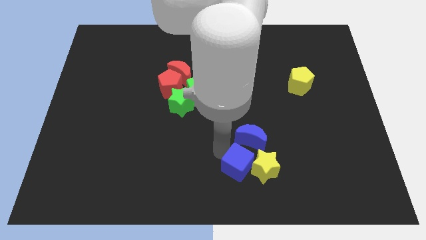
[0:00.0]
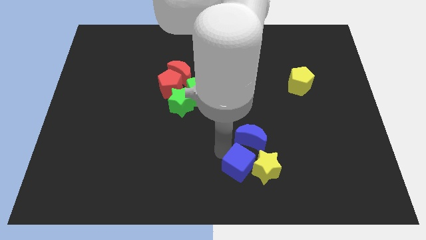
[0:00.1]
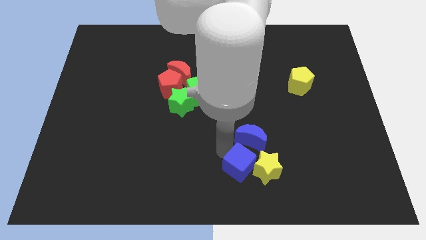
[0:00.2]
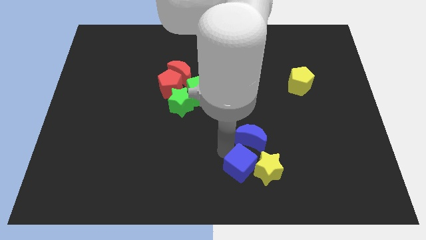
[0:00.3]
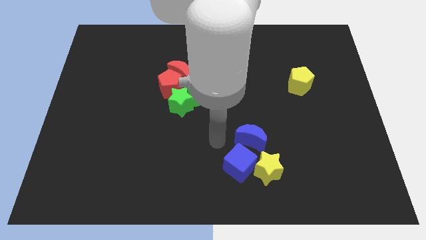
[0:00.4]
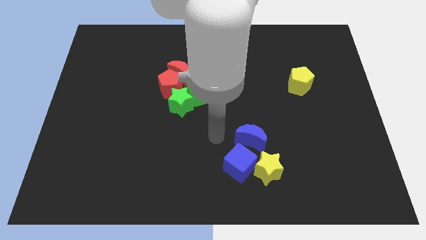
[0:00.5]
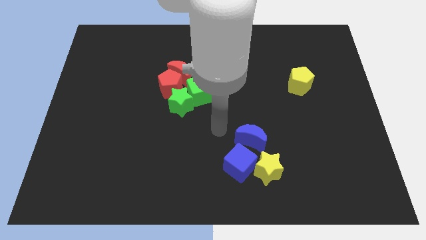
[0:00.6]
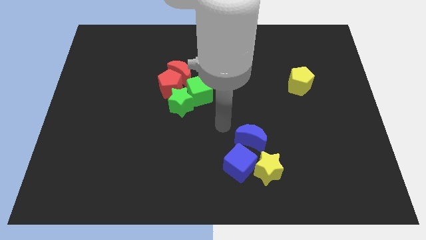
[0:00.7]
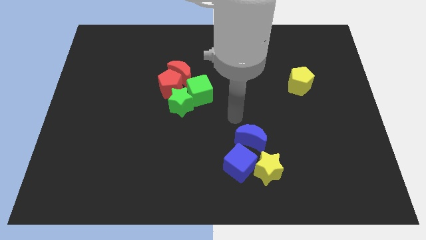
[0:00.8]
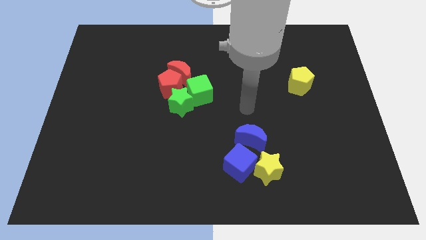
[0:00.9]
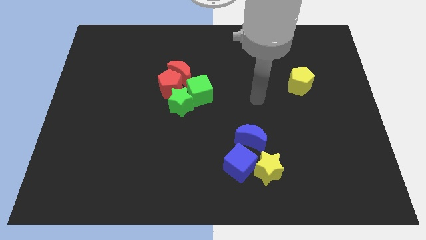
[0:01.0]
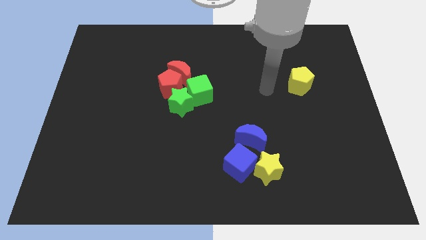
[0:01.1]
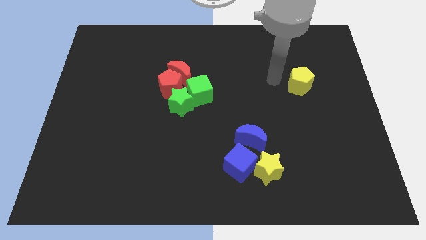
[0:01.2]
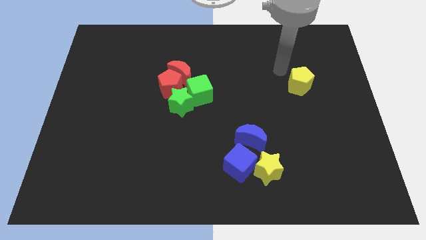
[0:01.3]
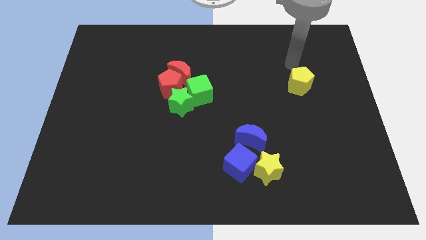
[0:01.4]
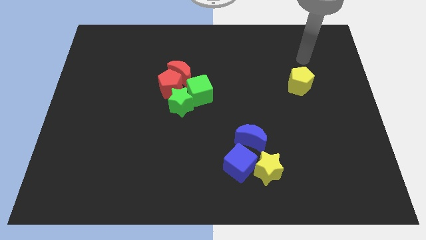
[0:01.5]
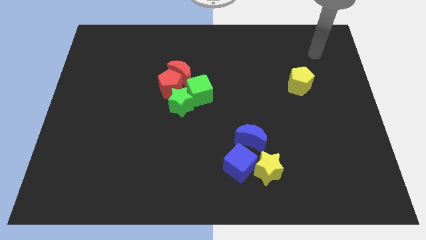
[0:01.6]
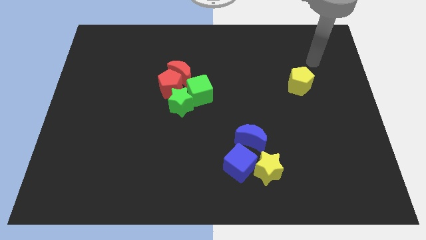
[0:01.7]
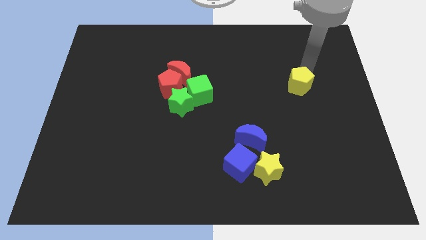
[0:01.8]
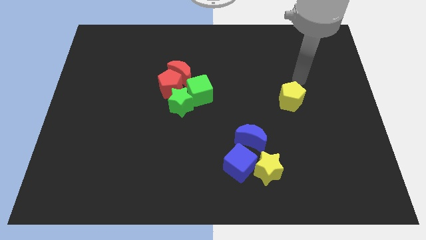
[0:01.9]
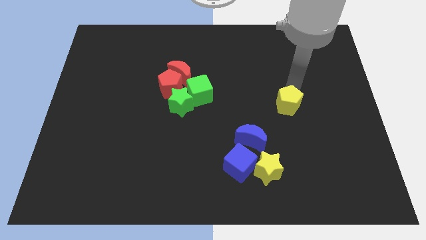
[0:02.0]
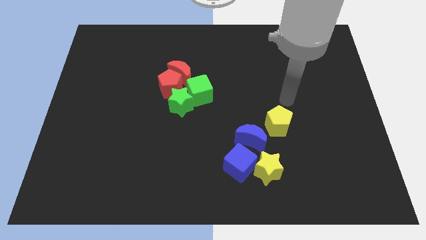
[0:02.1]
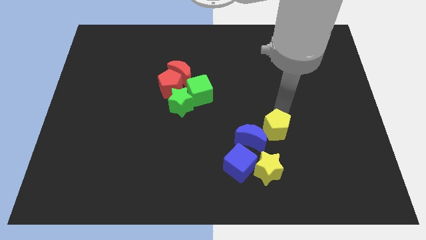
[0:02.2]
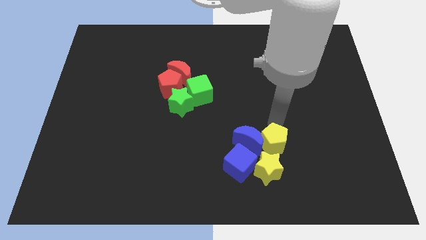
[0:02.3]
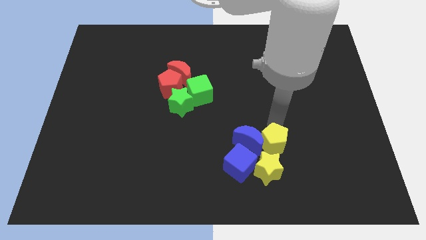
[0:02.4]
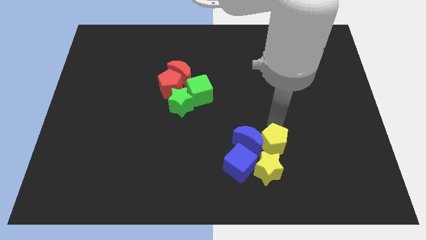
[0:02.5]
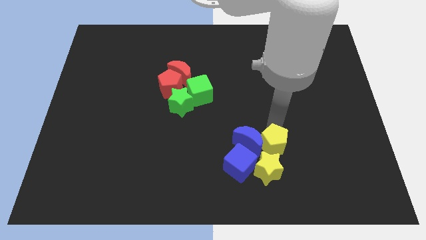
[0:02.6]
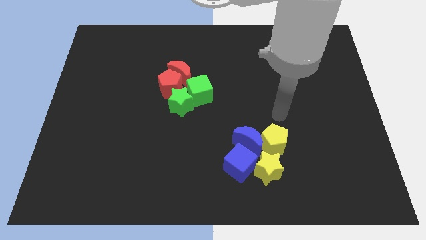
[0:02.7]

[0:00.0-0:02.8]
place the yellow pentagon to the right of the blue moon
